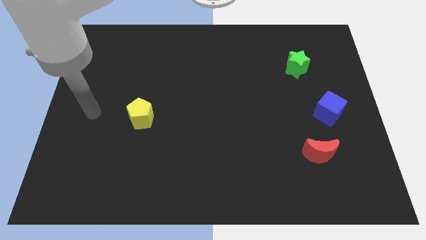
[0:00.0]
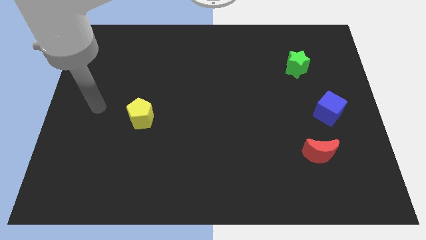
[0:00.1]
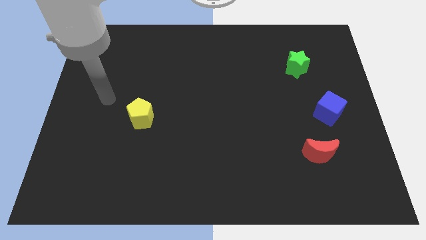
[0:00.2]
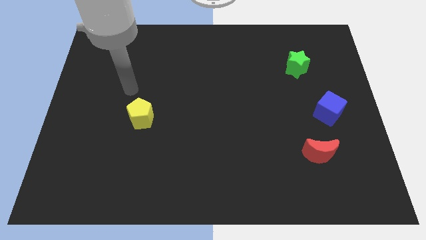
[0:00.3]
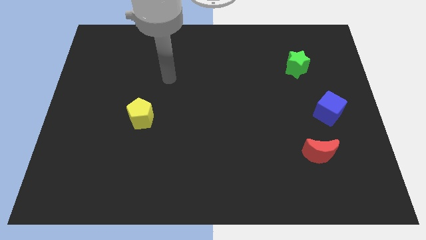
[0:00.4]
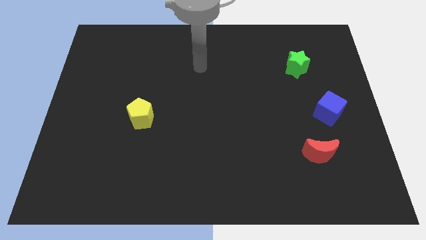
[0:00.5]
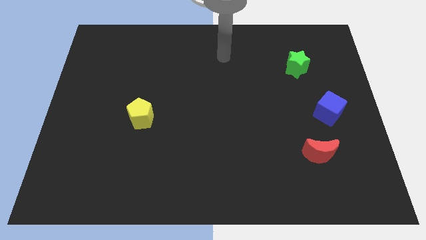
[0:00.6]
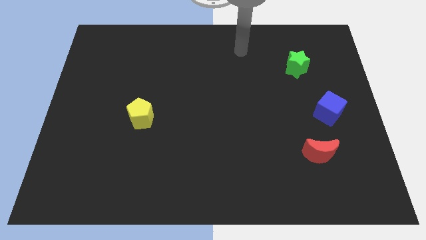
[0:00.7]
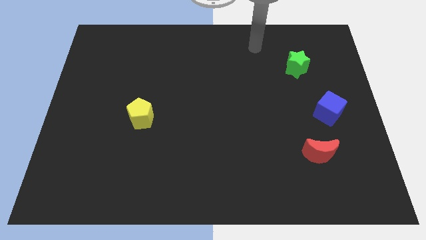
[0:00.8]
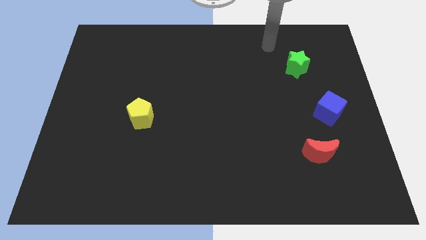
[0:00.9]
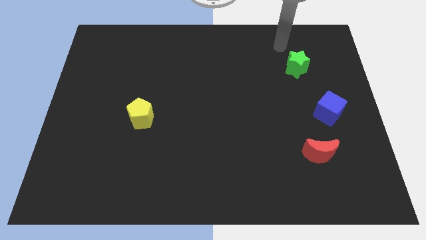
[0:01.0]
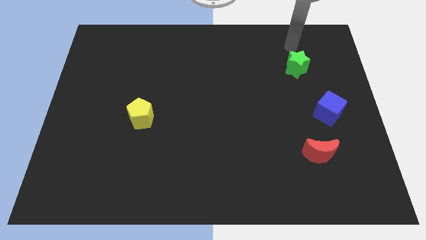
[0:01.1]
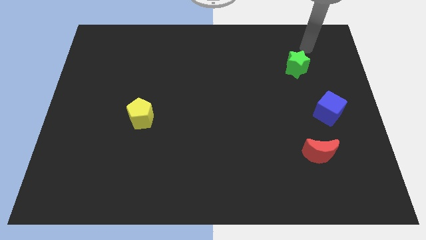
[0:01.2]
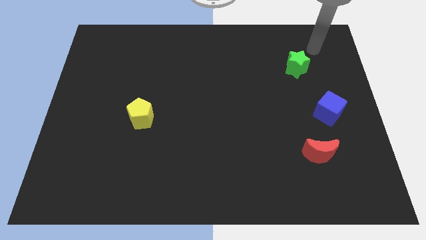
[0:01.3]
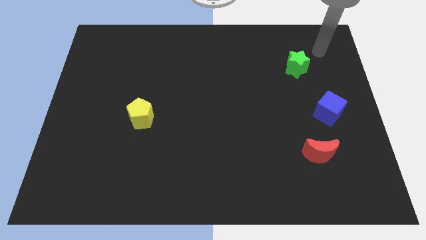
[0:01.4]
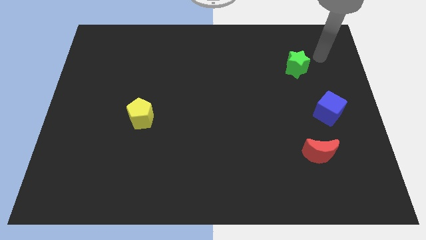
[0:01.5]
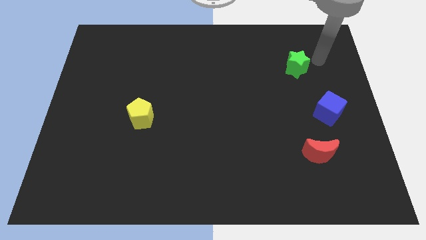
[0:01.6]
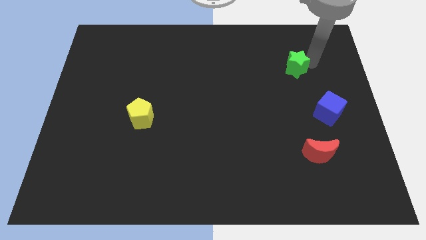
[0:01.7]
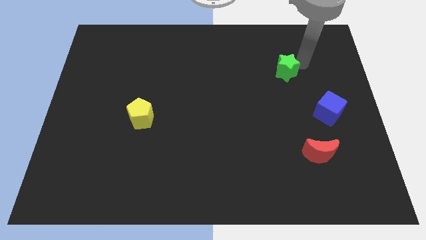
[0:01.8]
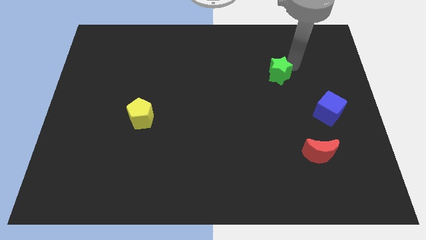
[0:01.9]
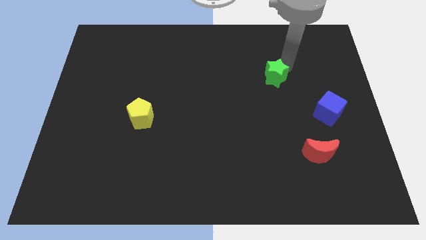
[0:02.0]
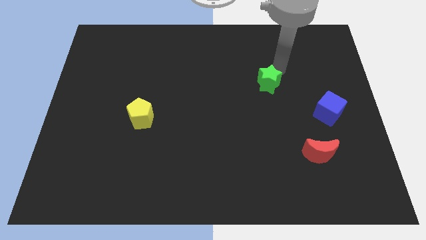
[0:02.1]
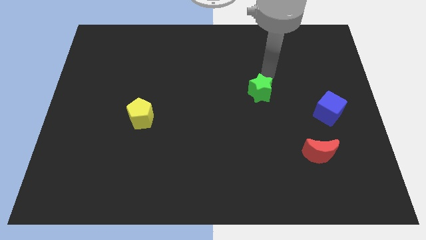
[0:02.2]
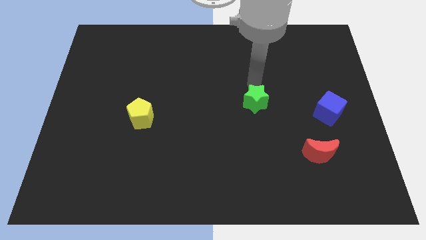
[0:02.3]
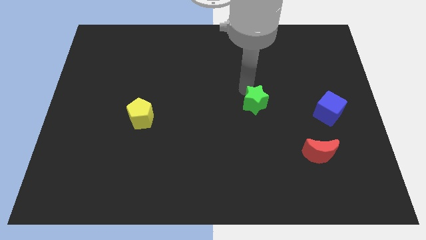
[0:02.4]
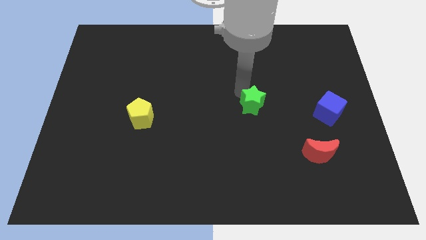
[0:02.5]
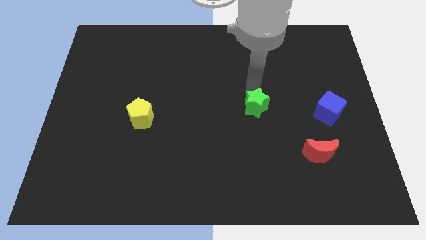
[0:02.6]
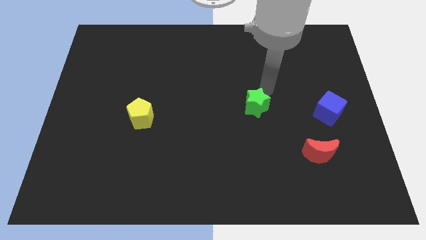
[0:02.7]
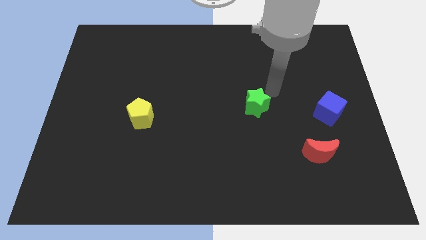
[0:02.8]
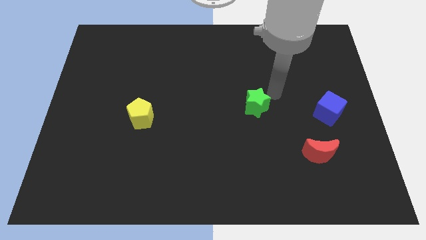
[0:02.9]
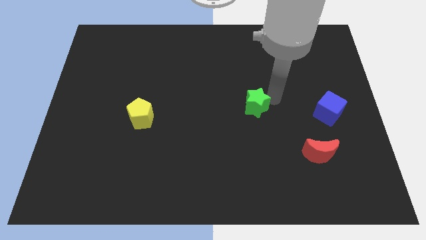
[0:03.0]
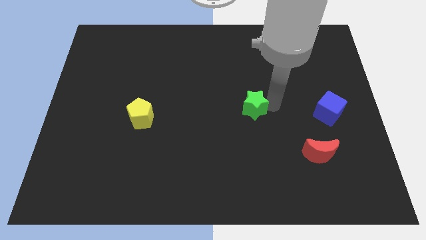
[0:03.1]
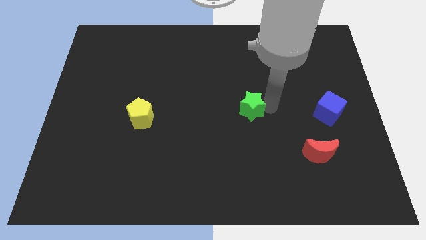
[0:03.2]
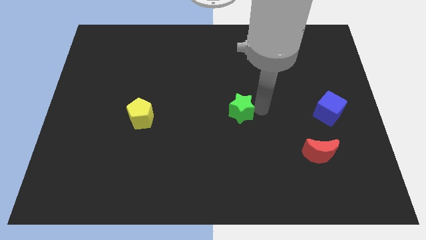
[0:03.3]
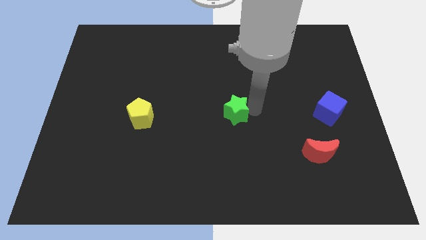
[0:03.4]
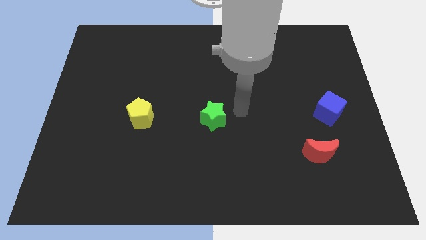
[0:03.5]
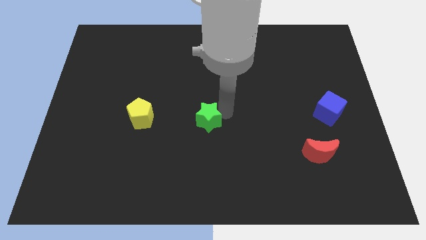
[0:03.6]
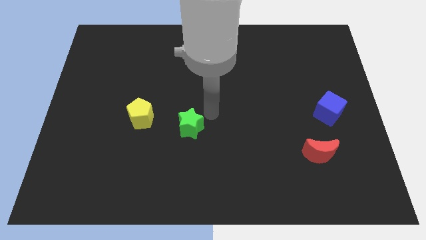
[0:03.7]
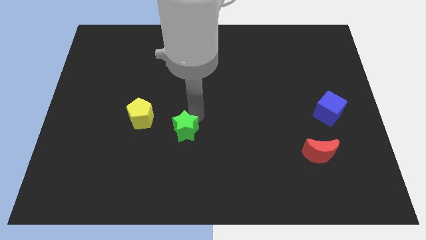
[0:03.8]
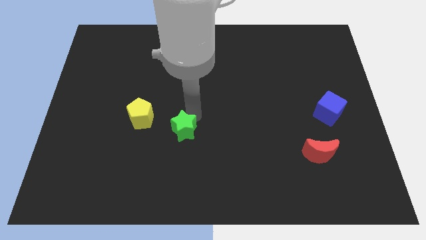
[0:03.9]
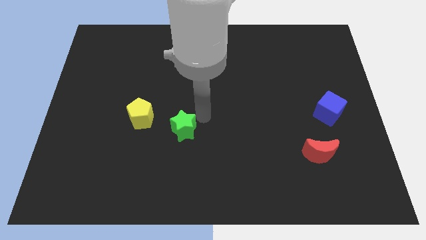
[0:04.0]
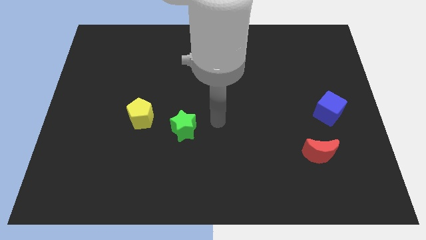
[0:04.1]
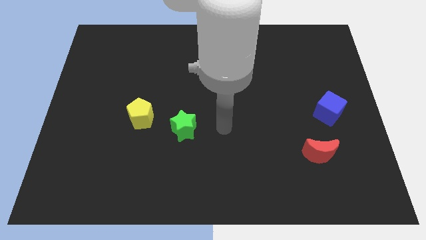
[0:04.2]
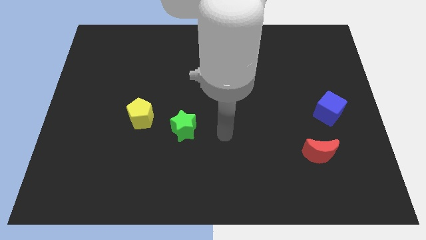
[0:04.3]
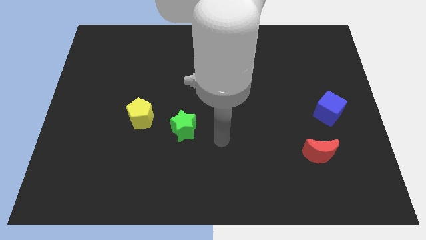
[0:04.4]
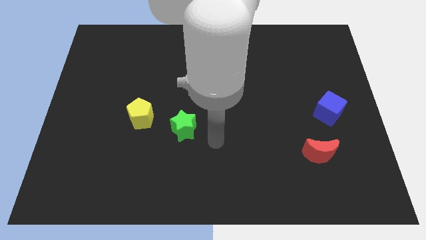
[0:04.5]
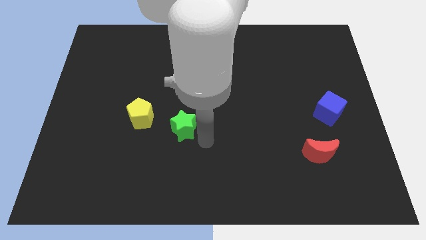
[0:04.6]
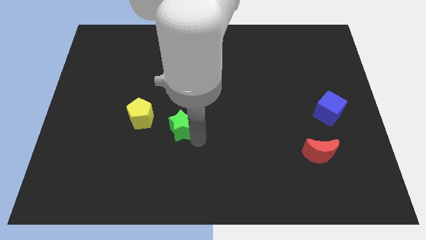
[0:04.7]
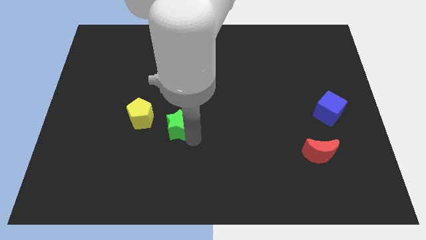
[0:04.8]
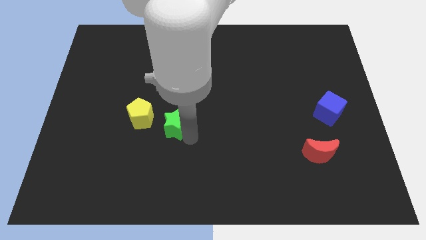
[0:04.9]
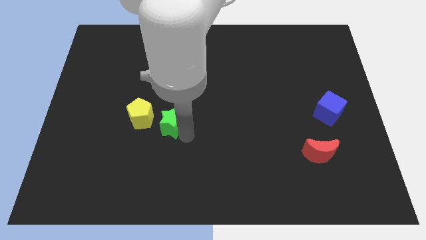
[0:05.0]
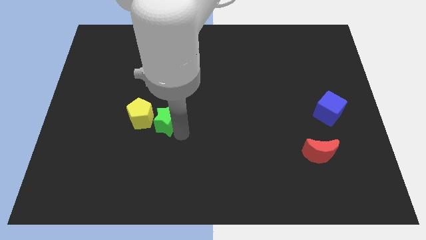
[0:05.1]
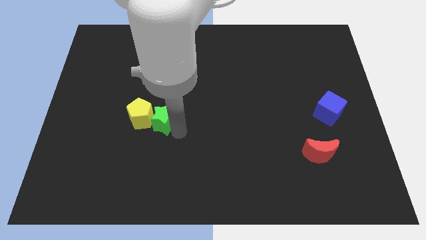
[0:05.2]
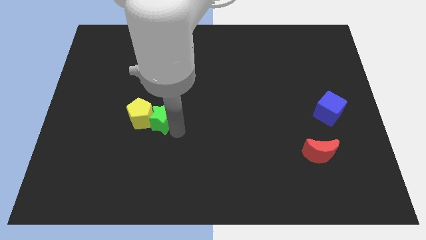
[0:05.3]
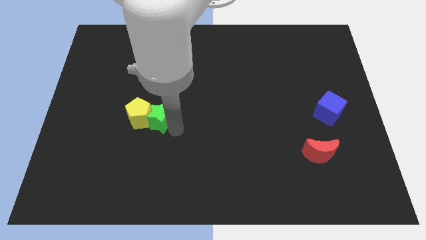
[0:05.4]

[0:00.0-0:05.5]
push the green star towards the yellow pentagon

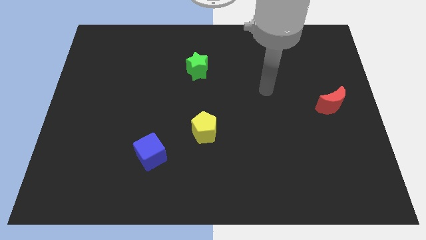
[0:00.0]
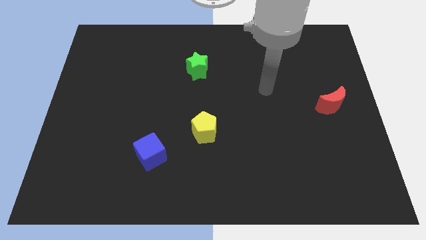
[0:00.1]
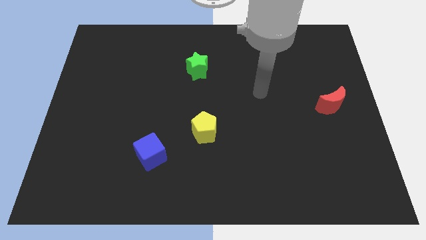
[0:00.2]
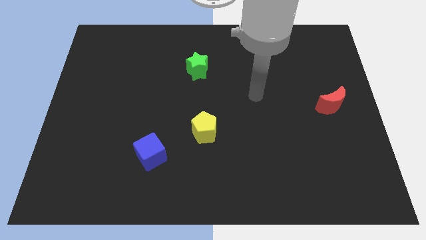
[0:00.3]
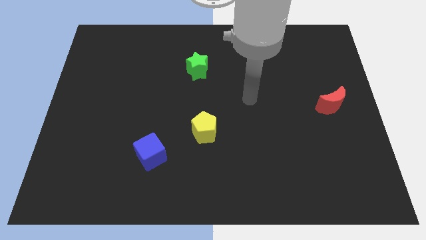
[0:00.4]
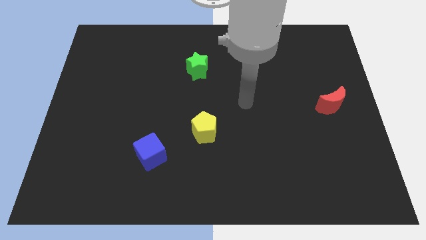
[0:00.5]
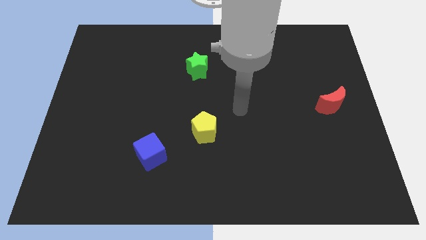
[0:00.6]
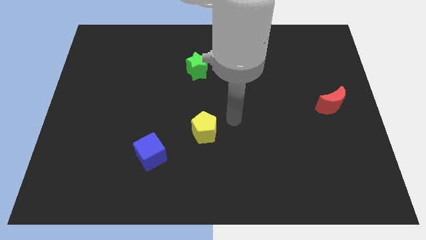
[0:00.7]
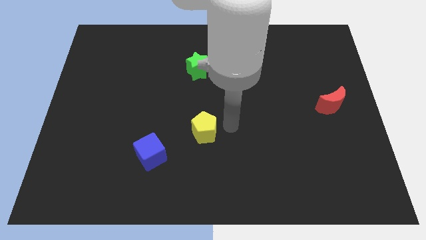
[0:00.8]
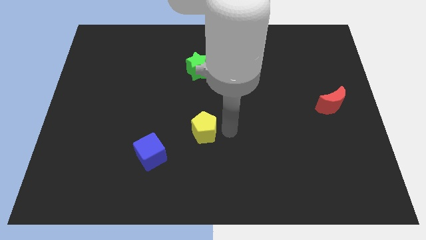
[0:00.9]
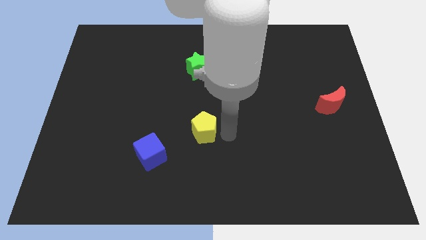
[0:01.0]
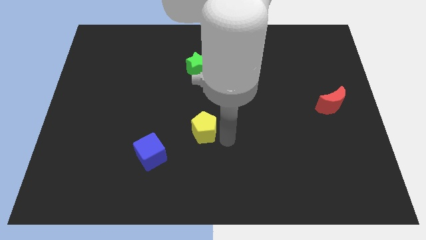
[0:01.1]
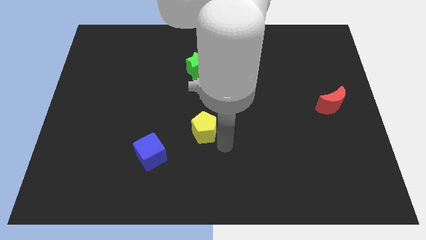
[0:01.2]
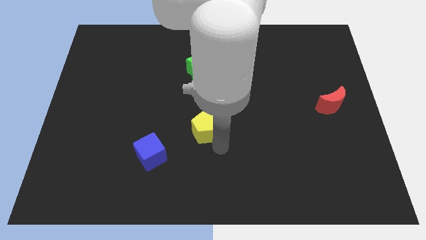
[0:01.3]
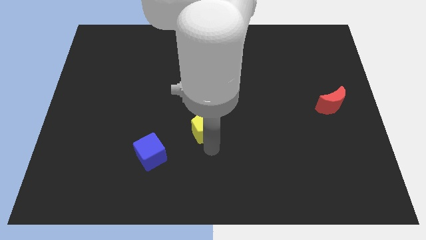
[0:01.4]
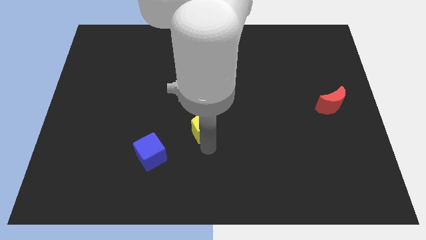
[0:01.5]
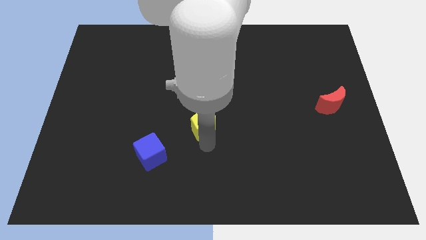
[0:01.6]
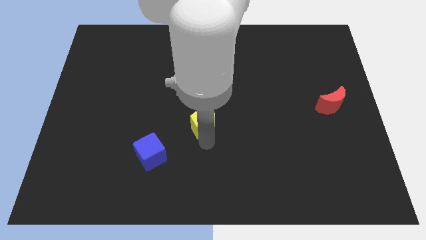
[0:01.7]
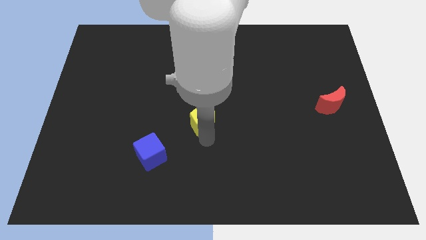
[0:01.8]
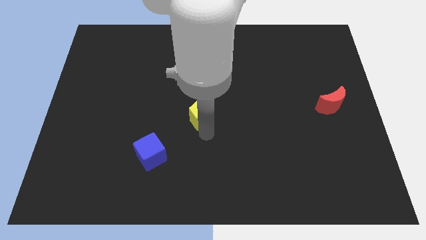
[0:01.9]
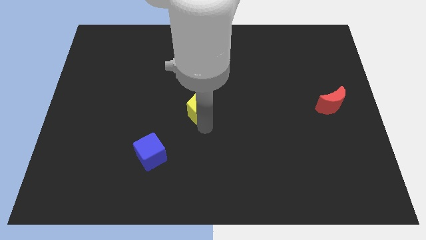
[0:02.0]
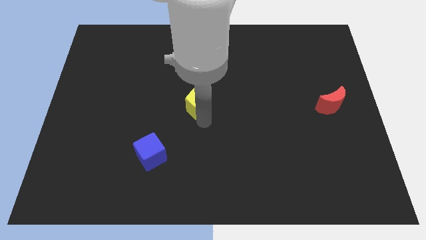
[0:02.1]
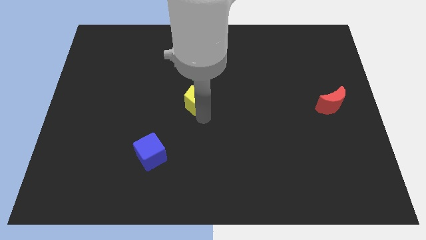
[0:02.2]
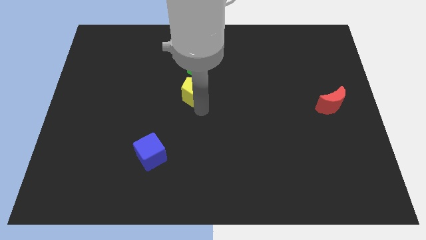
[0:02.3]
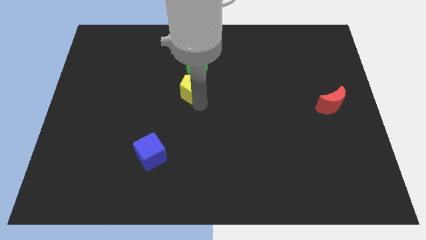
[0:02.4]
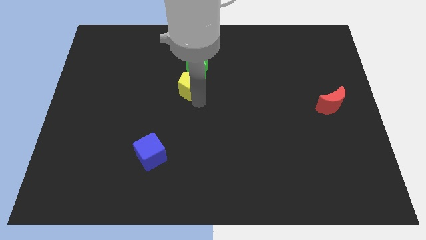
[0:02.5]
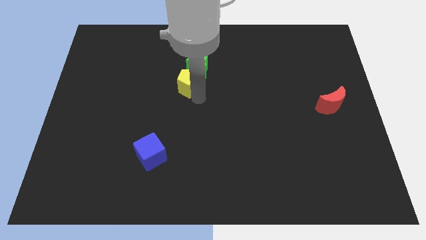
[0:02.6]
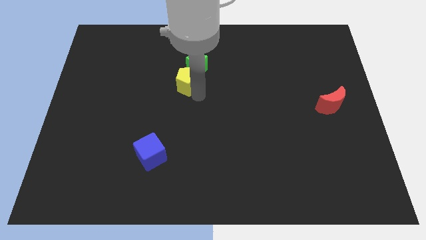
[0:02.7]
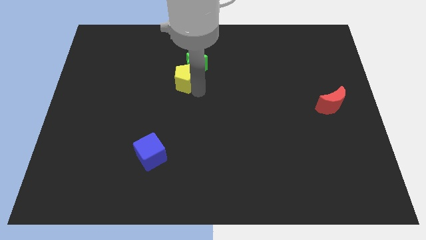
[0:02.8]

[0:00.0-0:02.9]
put the pentagon close to the green star

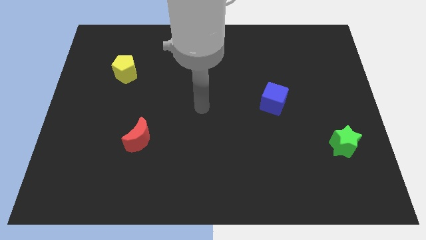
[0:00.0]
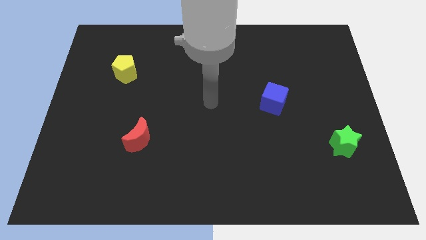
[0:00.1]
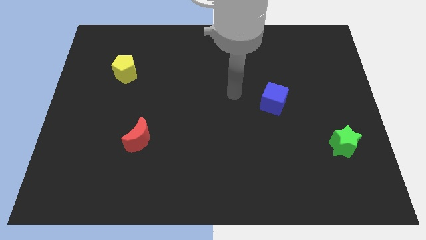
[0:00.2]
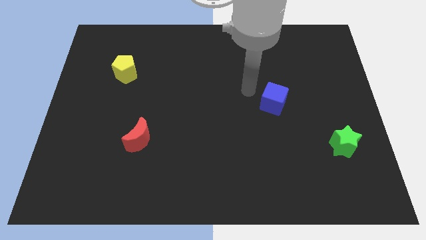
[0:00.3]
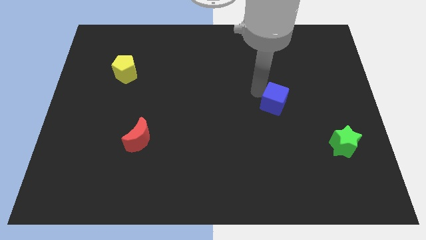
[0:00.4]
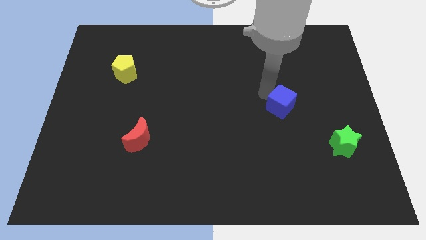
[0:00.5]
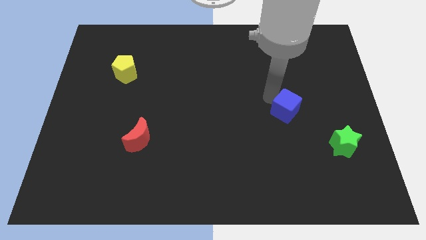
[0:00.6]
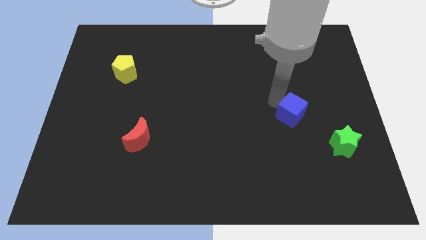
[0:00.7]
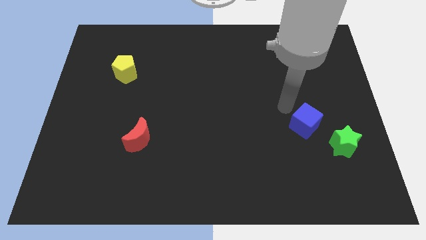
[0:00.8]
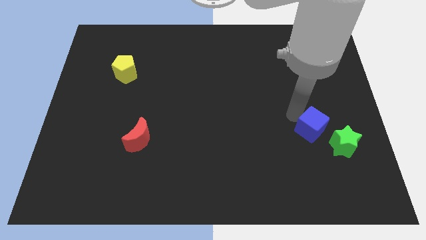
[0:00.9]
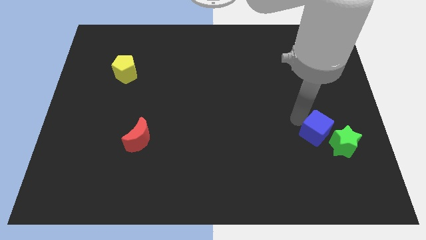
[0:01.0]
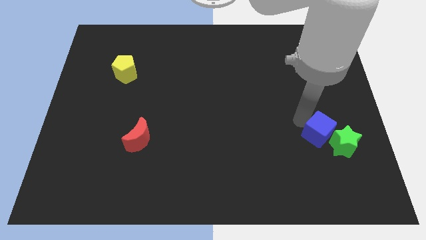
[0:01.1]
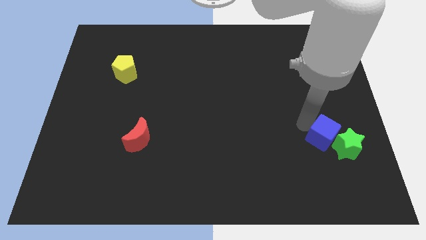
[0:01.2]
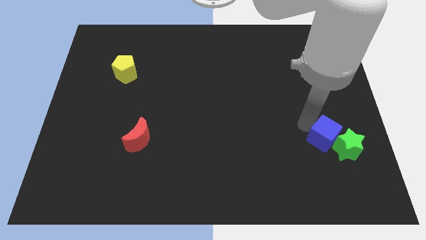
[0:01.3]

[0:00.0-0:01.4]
move the blue cube to the green block
